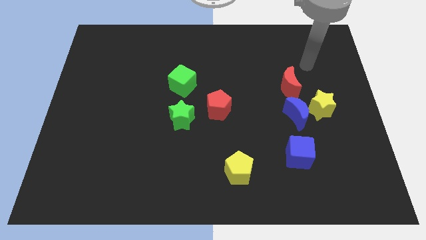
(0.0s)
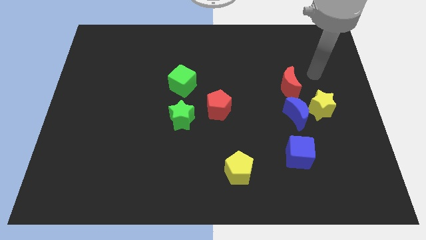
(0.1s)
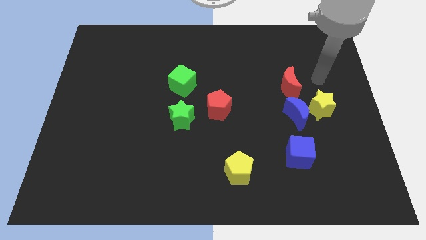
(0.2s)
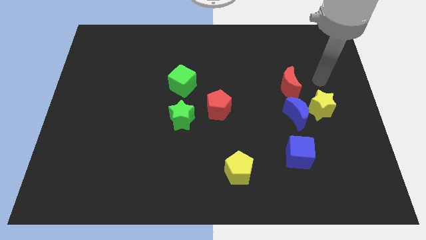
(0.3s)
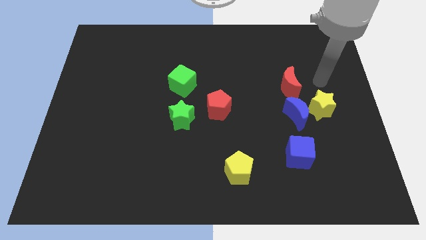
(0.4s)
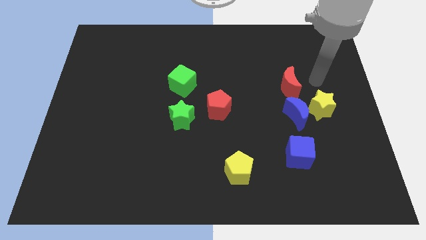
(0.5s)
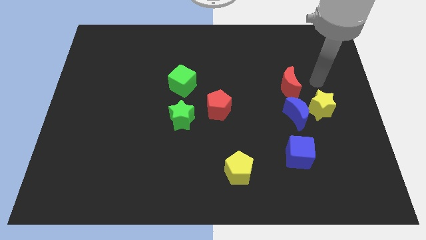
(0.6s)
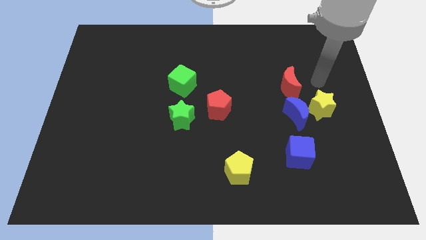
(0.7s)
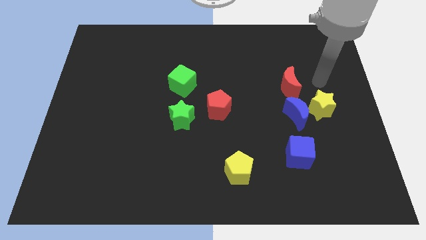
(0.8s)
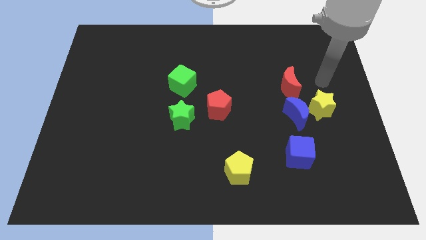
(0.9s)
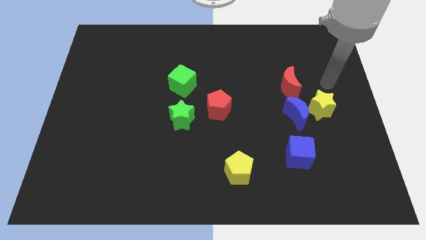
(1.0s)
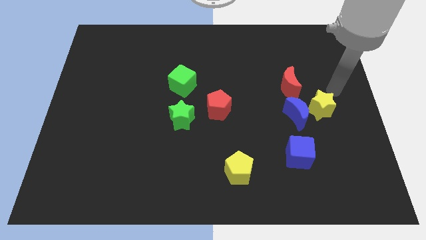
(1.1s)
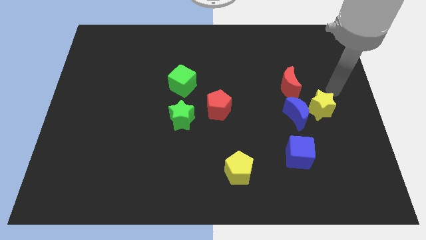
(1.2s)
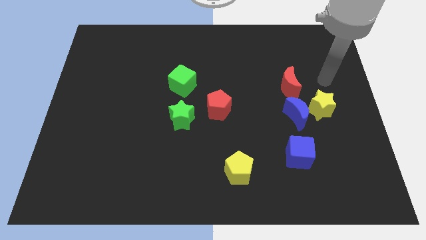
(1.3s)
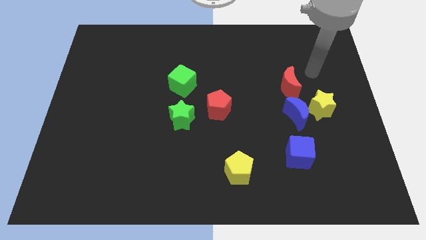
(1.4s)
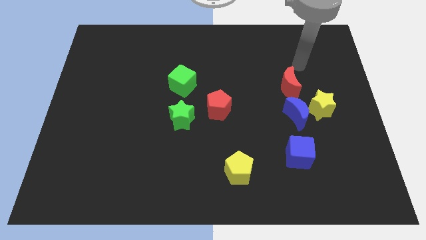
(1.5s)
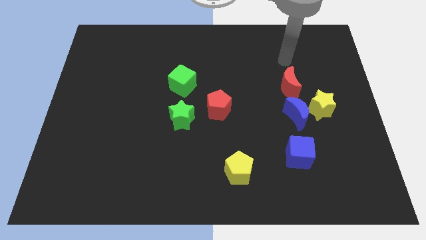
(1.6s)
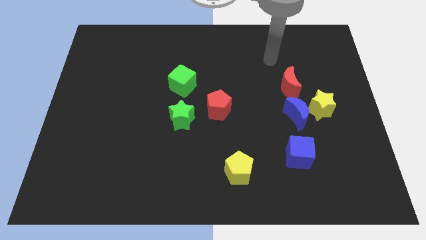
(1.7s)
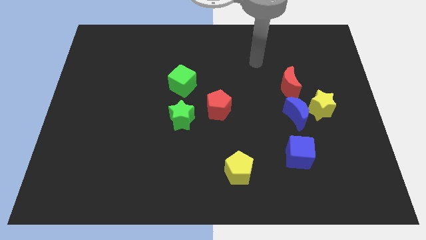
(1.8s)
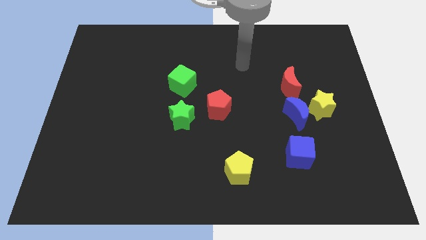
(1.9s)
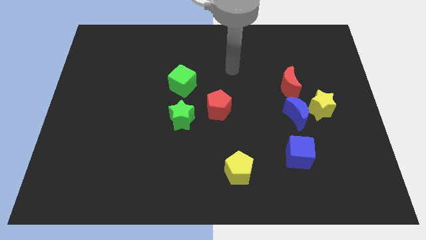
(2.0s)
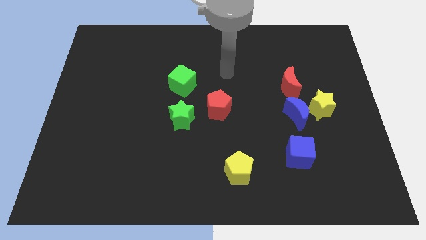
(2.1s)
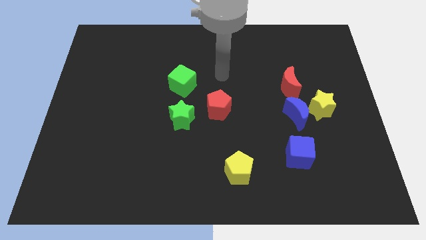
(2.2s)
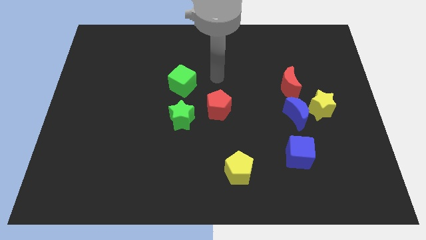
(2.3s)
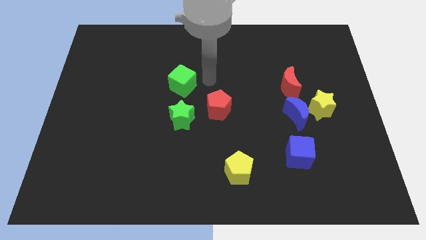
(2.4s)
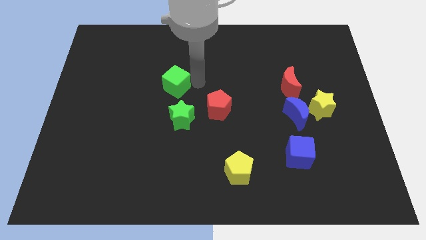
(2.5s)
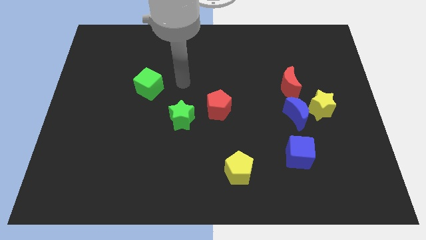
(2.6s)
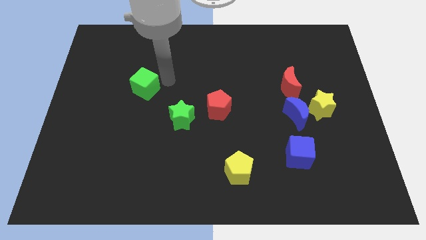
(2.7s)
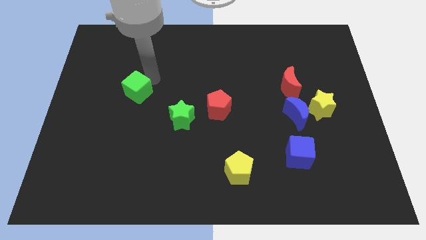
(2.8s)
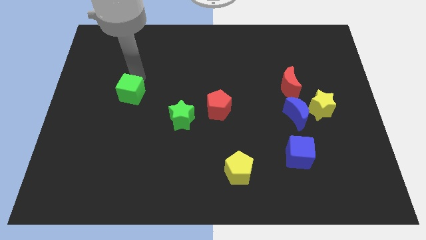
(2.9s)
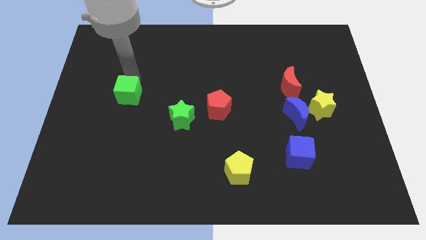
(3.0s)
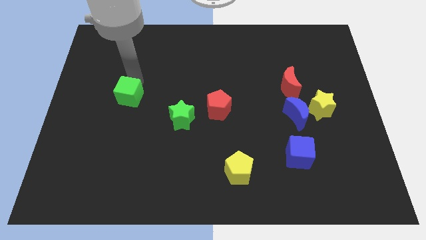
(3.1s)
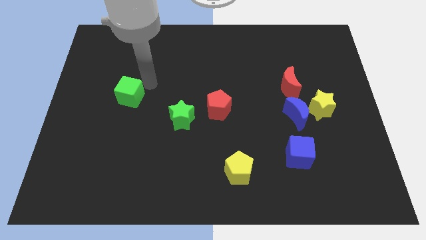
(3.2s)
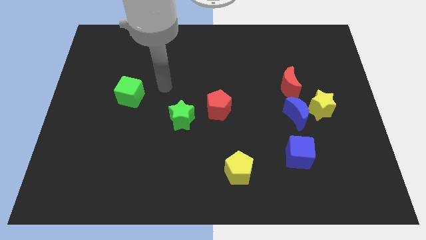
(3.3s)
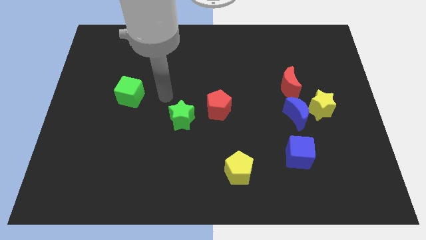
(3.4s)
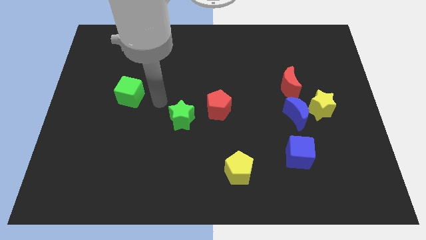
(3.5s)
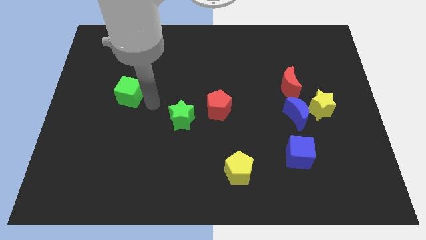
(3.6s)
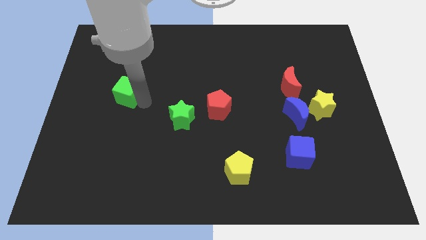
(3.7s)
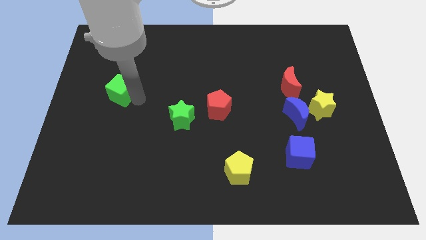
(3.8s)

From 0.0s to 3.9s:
push the green cube diagonally to the top left of the green star

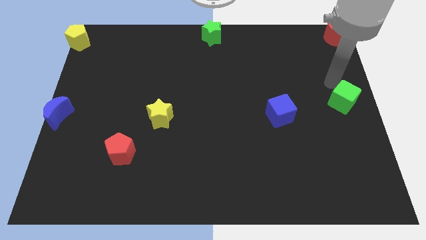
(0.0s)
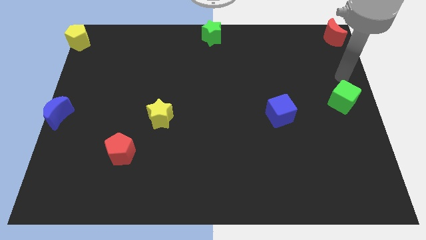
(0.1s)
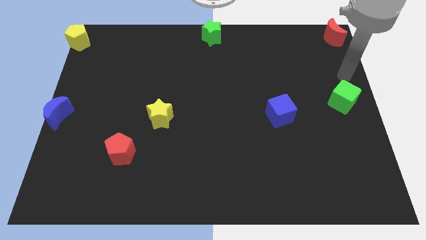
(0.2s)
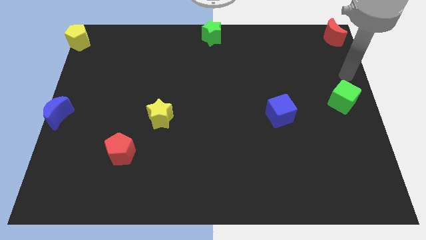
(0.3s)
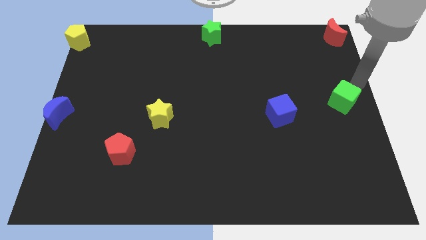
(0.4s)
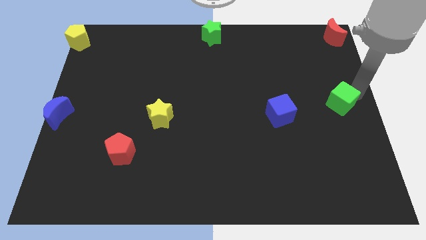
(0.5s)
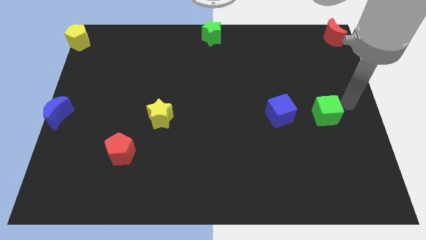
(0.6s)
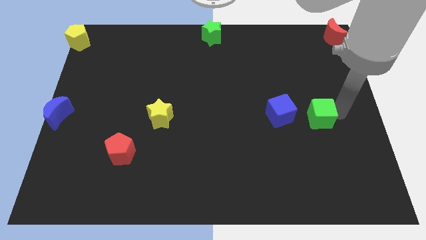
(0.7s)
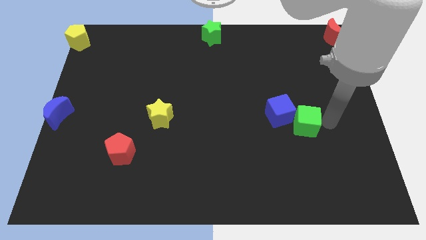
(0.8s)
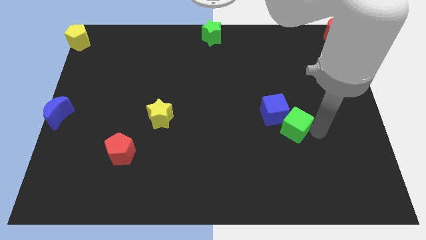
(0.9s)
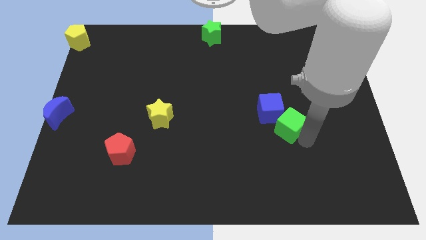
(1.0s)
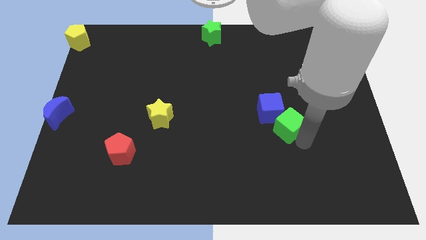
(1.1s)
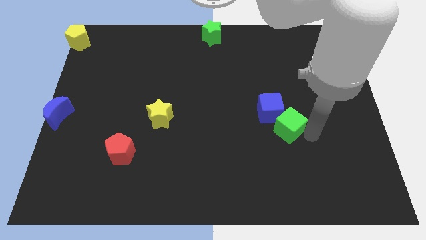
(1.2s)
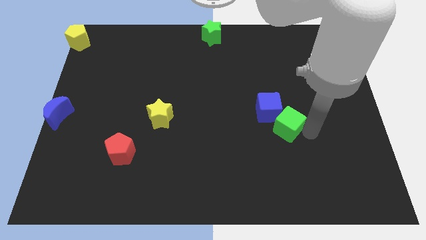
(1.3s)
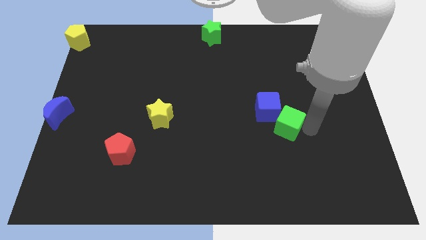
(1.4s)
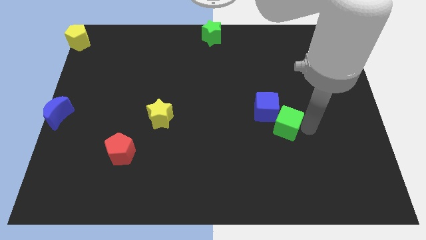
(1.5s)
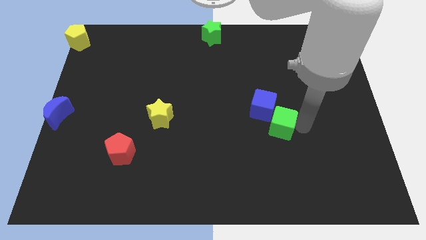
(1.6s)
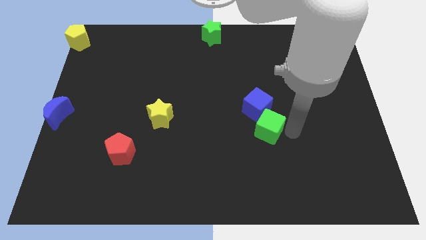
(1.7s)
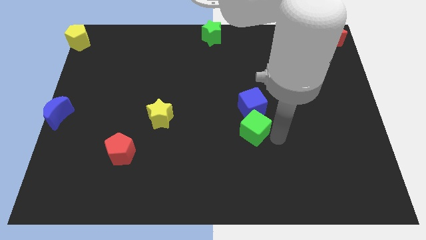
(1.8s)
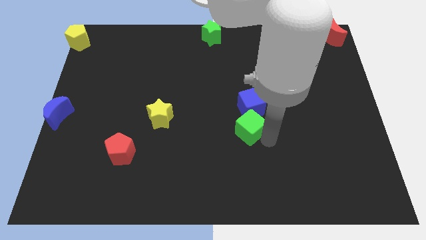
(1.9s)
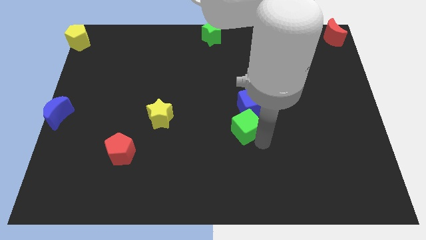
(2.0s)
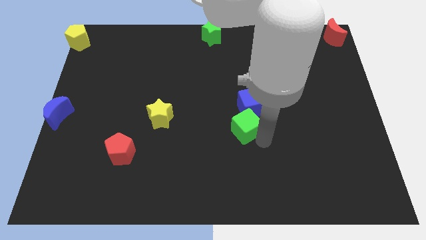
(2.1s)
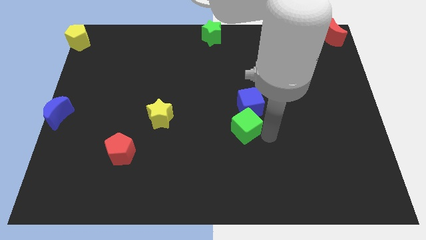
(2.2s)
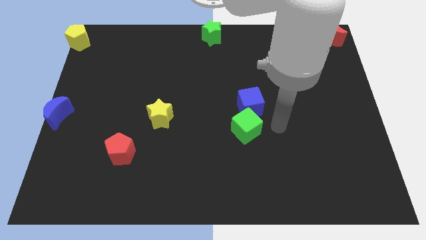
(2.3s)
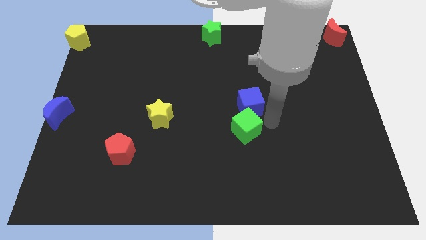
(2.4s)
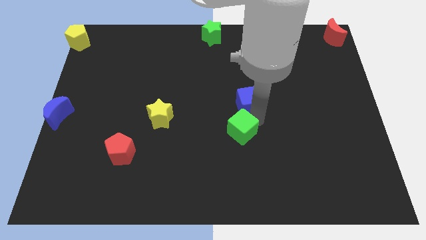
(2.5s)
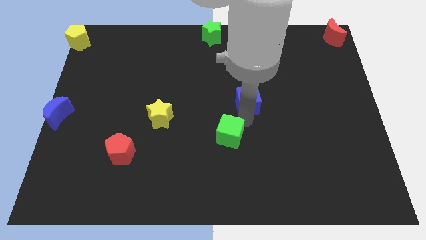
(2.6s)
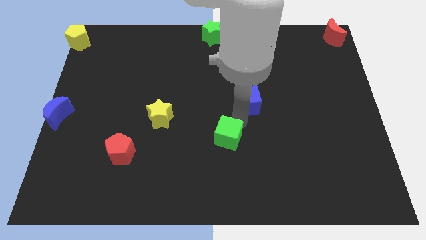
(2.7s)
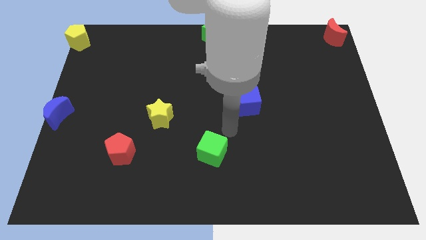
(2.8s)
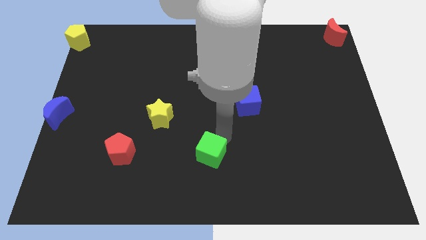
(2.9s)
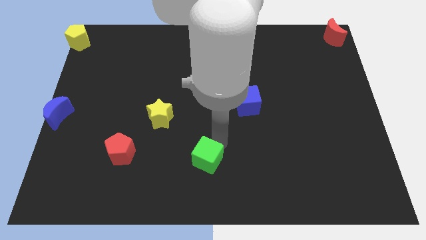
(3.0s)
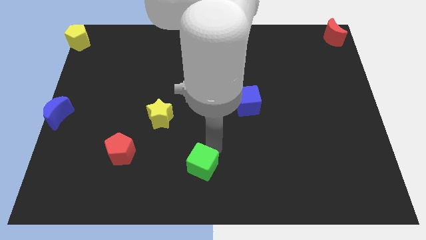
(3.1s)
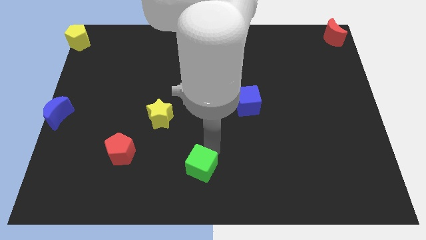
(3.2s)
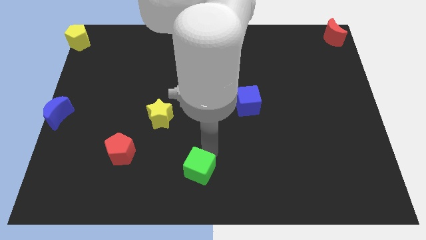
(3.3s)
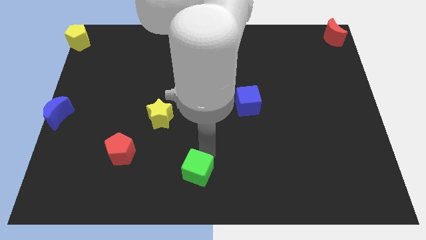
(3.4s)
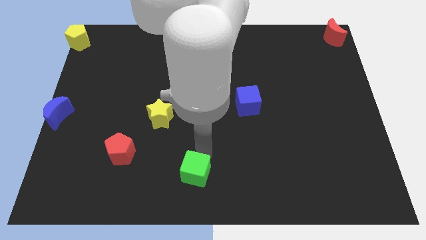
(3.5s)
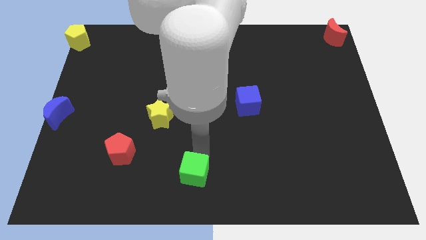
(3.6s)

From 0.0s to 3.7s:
push the green cube to the bottom center of the board

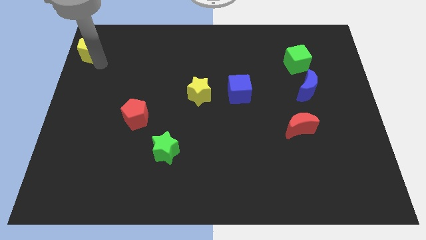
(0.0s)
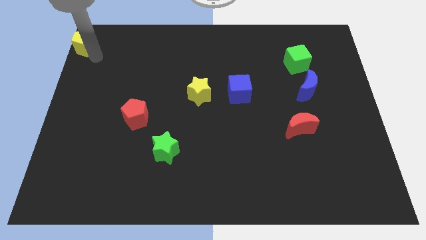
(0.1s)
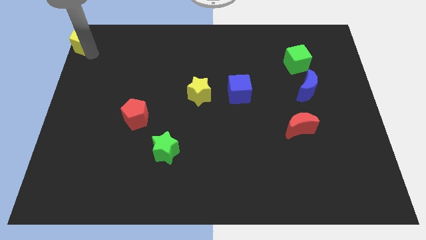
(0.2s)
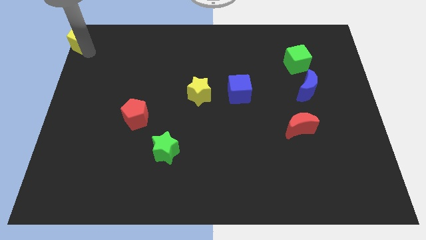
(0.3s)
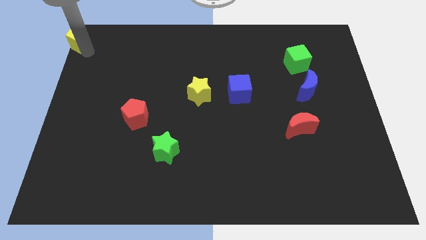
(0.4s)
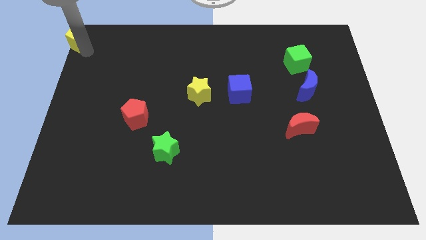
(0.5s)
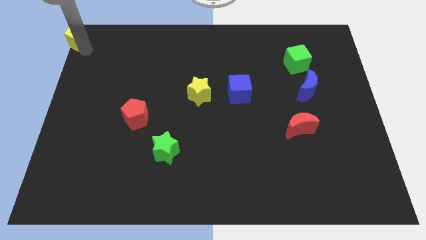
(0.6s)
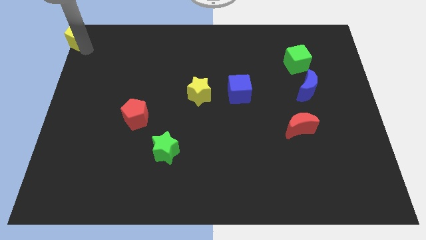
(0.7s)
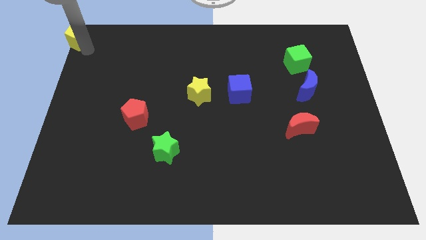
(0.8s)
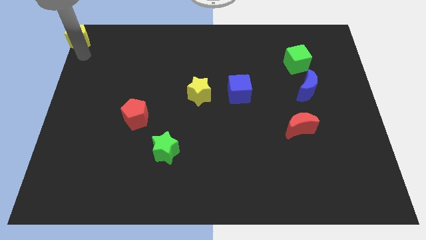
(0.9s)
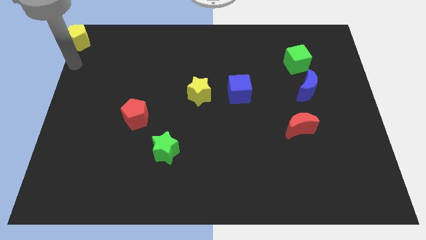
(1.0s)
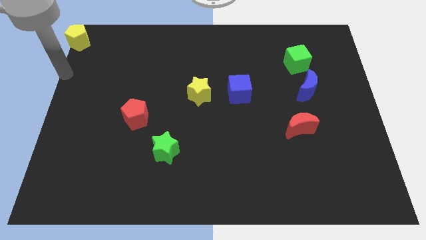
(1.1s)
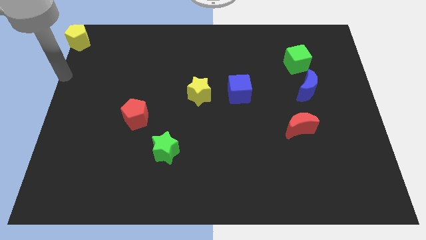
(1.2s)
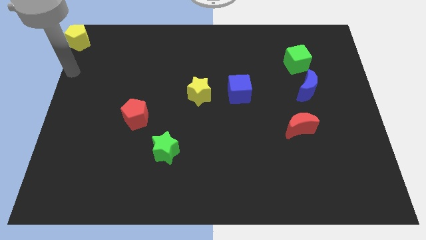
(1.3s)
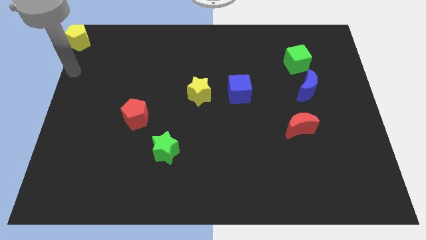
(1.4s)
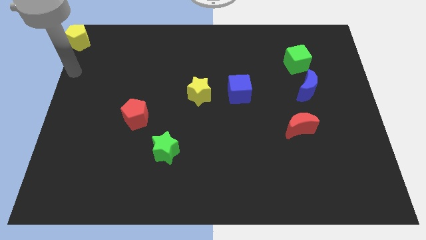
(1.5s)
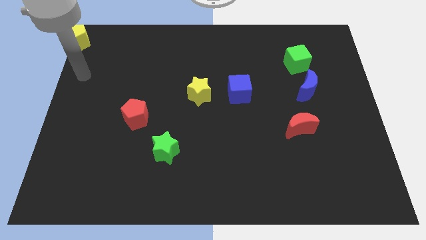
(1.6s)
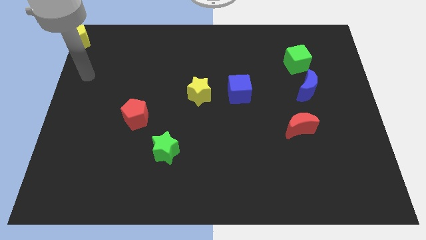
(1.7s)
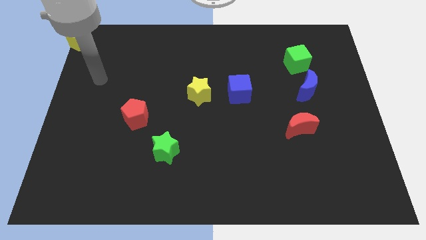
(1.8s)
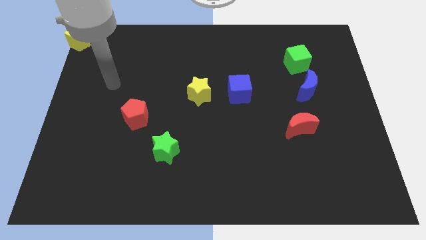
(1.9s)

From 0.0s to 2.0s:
place yellow pentagon to the top left corner of the board
